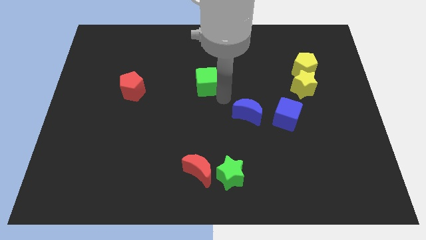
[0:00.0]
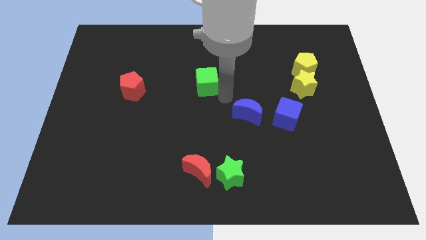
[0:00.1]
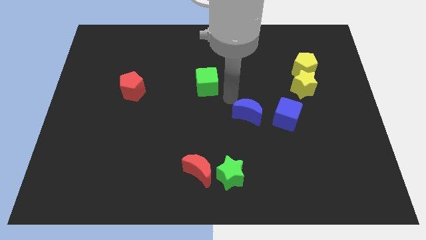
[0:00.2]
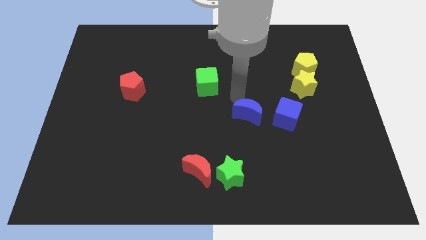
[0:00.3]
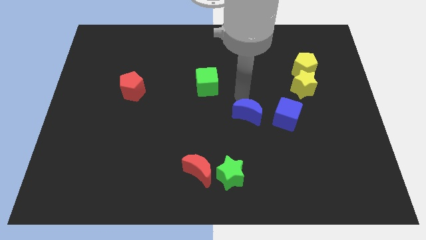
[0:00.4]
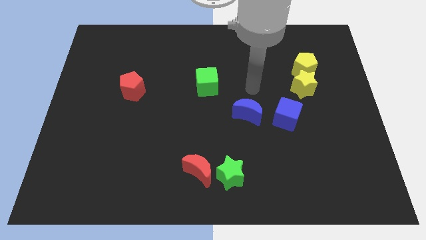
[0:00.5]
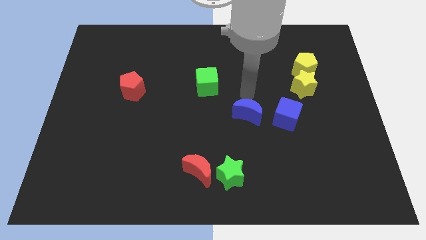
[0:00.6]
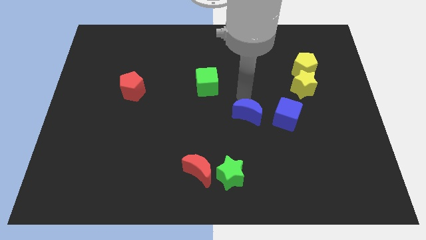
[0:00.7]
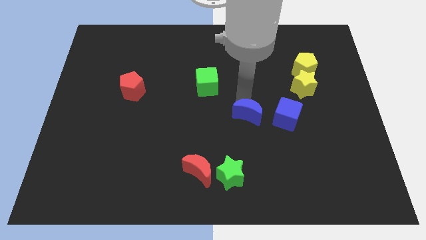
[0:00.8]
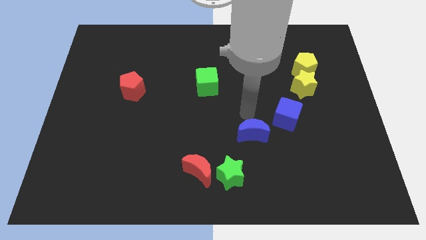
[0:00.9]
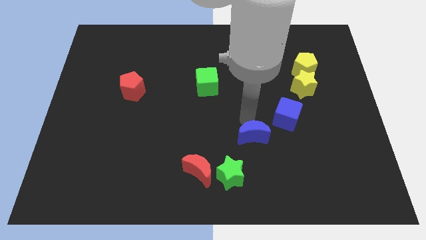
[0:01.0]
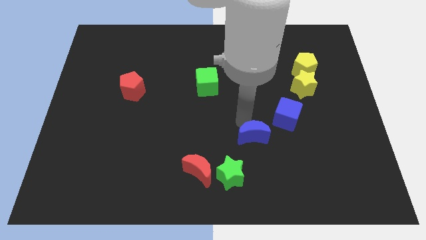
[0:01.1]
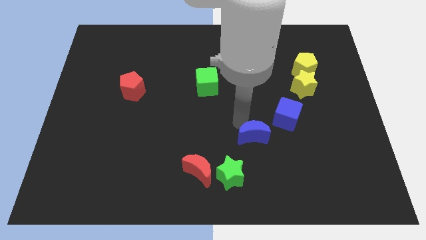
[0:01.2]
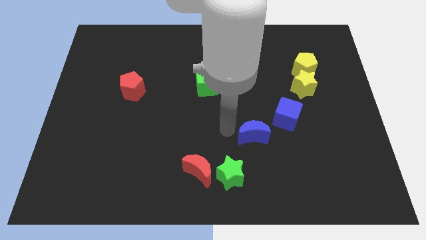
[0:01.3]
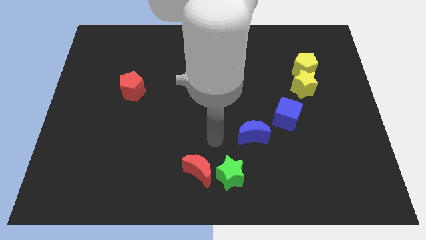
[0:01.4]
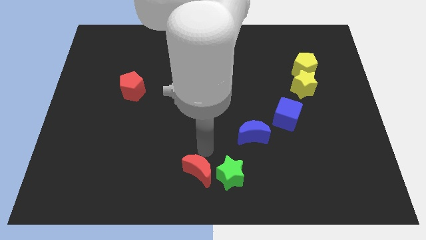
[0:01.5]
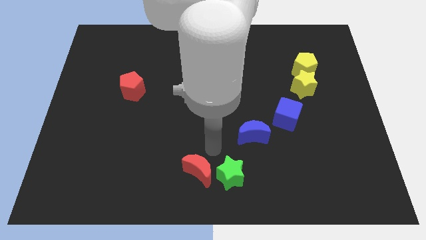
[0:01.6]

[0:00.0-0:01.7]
slightly move the blue crescent towards the bottom side of the board

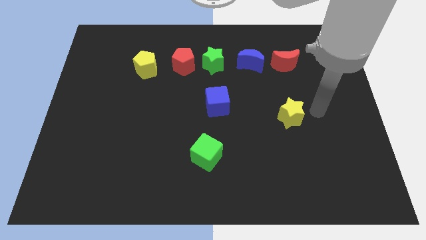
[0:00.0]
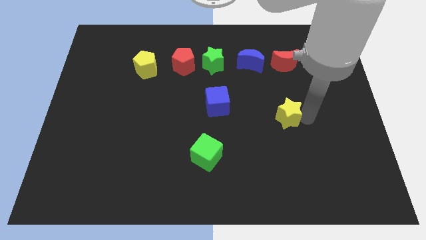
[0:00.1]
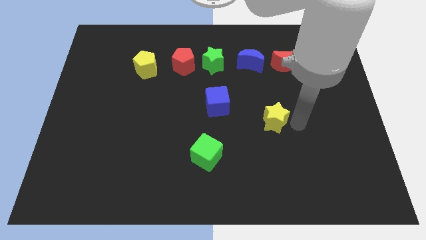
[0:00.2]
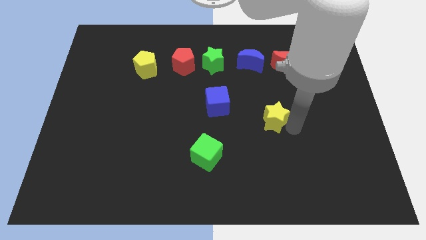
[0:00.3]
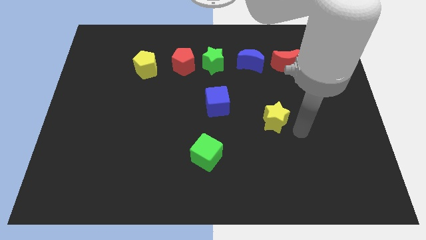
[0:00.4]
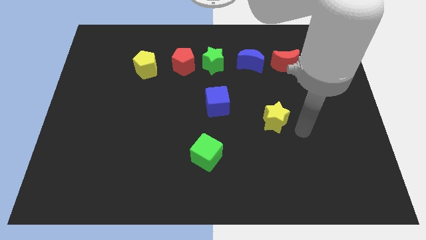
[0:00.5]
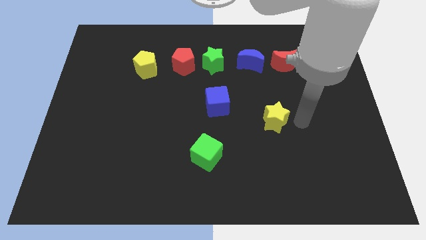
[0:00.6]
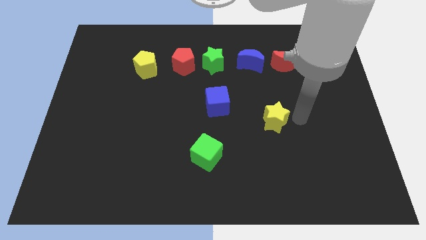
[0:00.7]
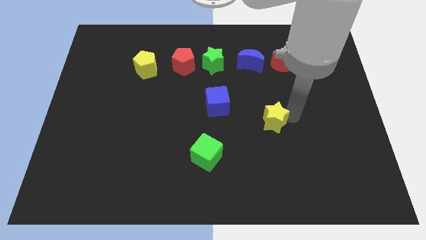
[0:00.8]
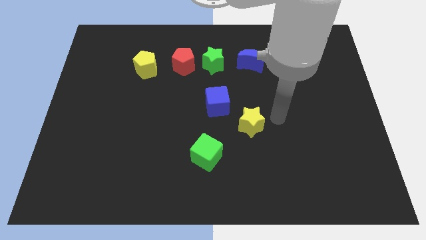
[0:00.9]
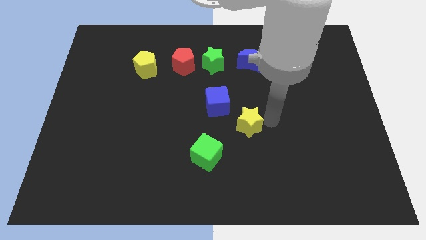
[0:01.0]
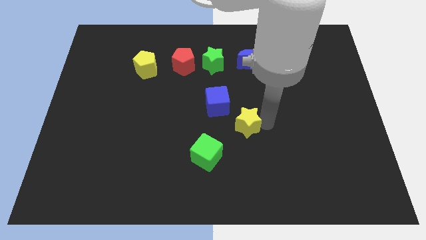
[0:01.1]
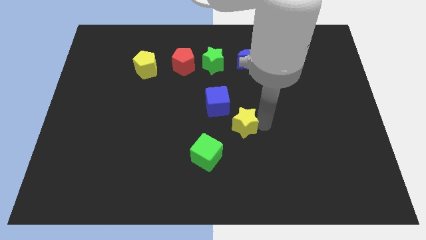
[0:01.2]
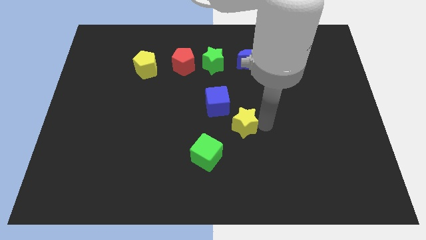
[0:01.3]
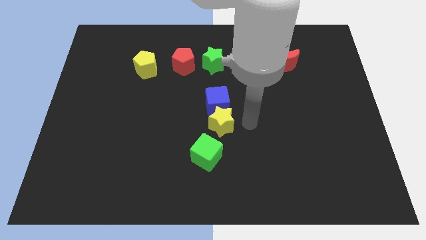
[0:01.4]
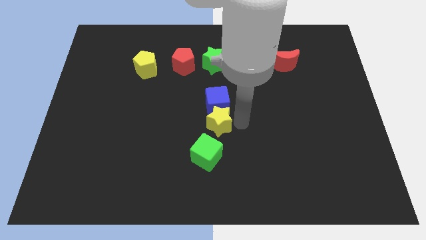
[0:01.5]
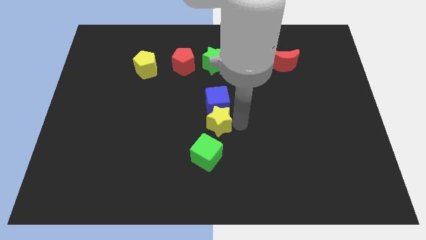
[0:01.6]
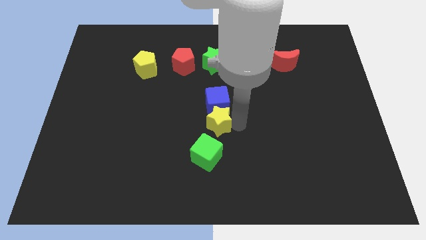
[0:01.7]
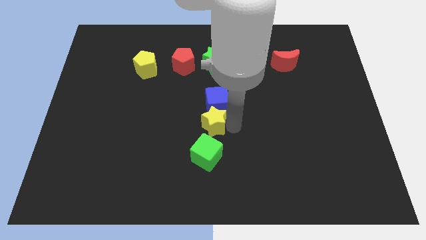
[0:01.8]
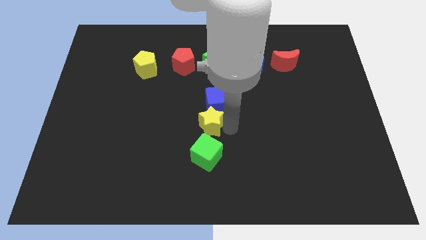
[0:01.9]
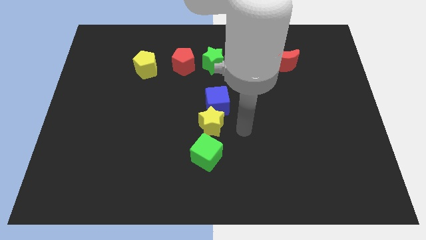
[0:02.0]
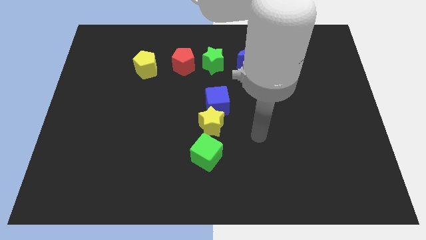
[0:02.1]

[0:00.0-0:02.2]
place the yellow star between blue and green cube at the center

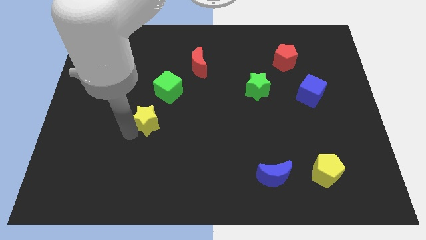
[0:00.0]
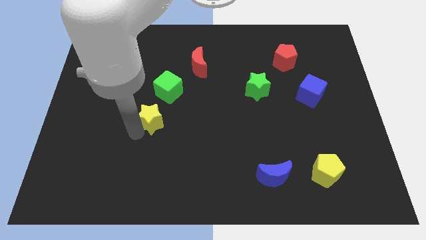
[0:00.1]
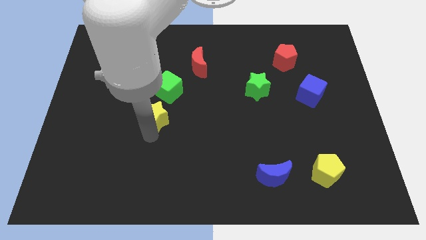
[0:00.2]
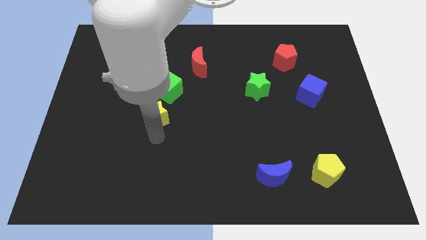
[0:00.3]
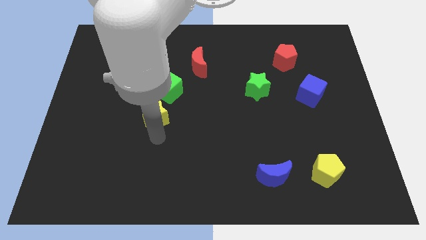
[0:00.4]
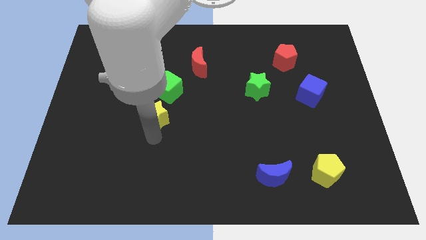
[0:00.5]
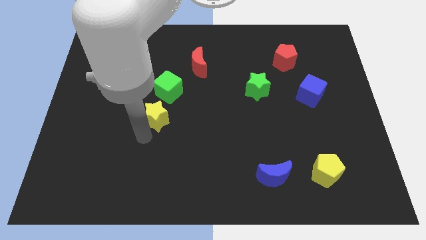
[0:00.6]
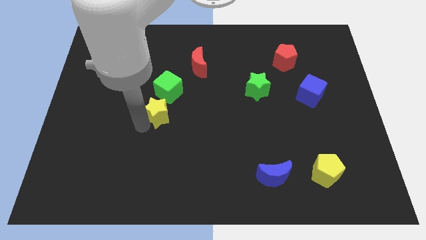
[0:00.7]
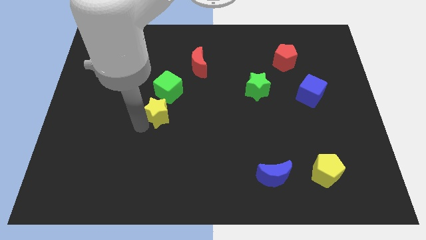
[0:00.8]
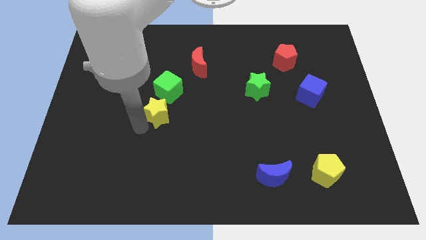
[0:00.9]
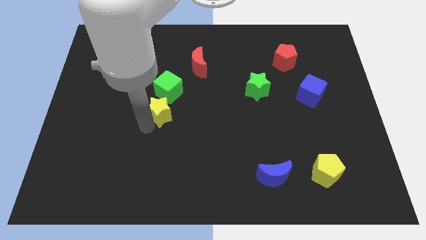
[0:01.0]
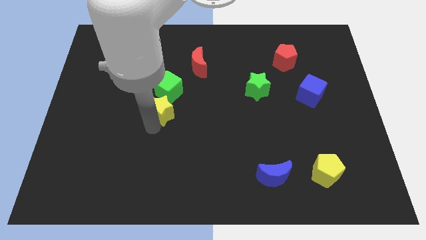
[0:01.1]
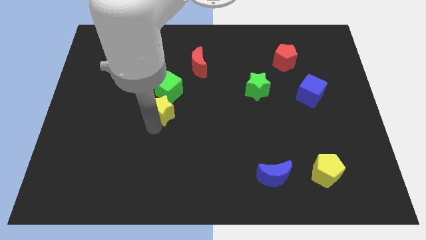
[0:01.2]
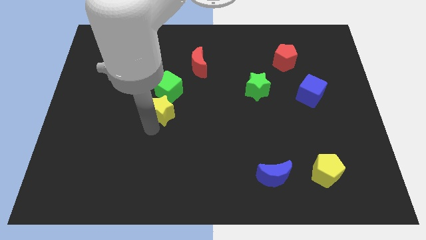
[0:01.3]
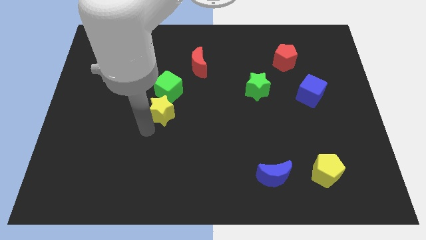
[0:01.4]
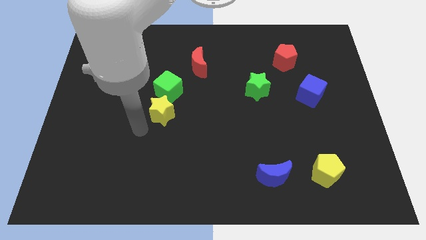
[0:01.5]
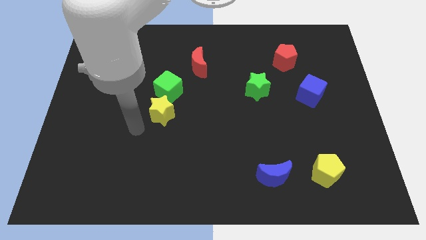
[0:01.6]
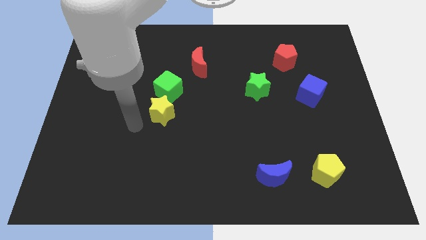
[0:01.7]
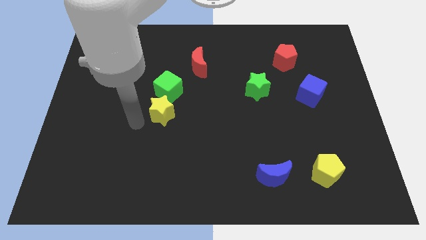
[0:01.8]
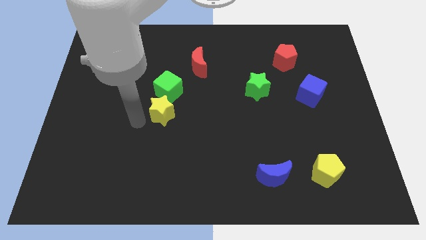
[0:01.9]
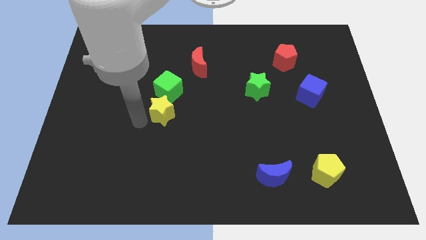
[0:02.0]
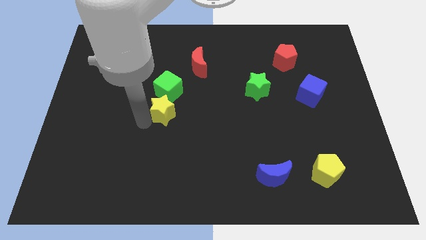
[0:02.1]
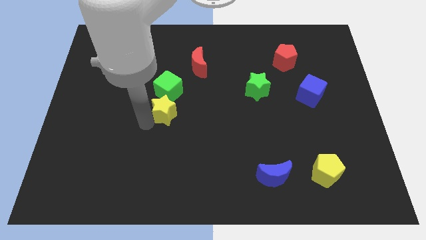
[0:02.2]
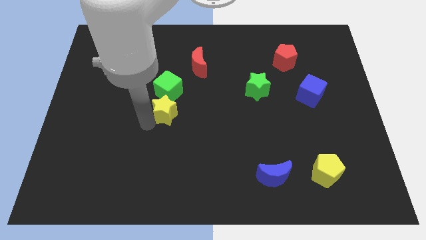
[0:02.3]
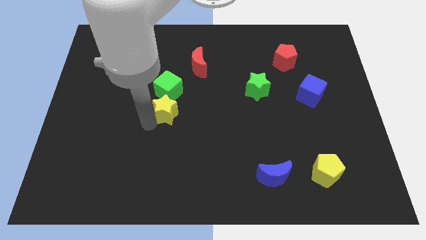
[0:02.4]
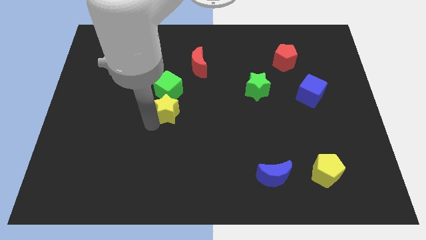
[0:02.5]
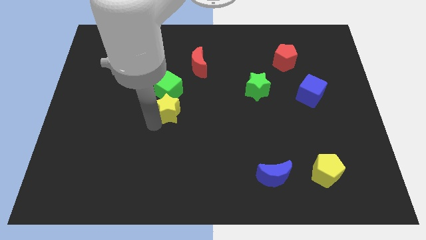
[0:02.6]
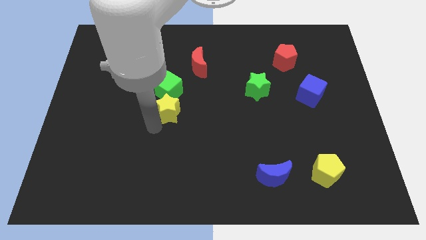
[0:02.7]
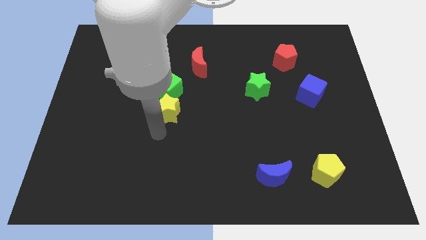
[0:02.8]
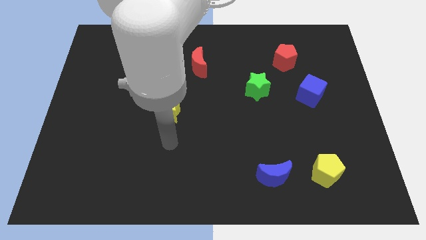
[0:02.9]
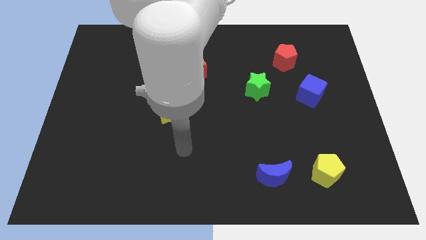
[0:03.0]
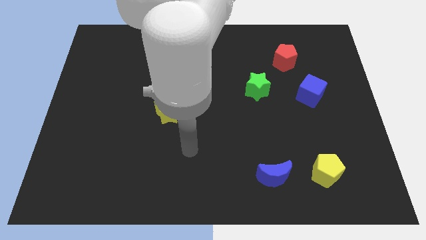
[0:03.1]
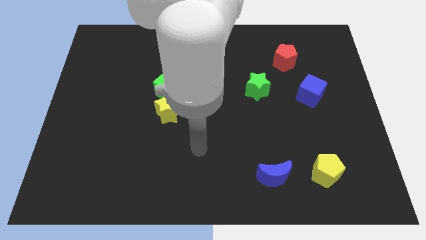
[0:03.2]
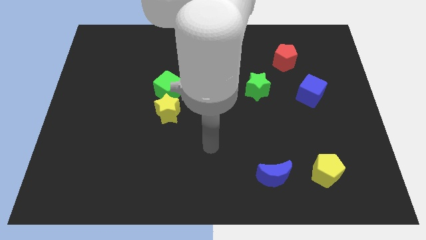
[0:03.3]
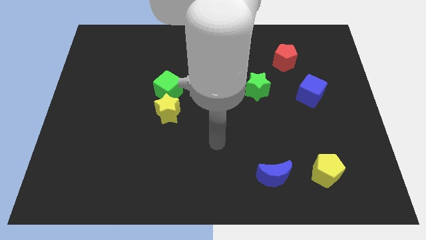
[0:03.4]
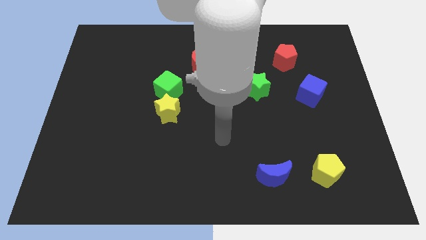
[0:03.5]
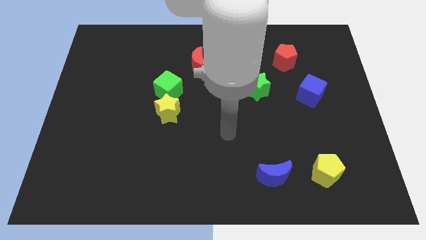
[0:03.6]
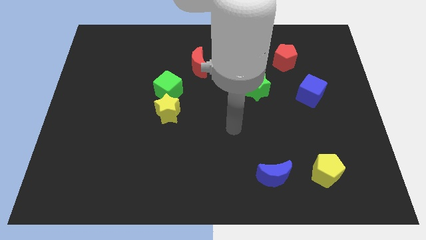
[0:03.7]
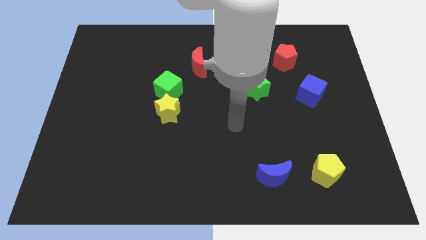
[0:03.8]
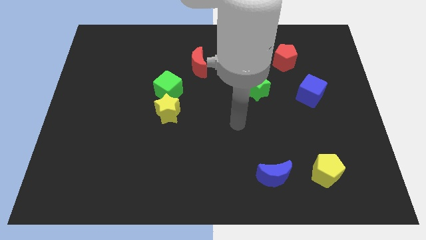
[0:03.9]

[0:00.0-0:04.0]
place the yellow star into the green cube

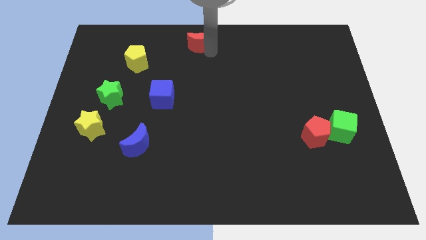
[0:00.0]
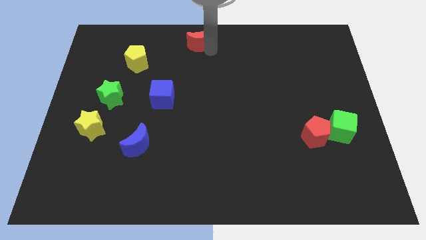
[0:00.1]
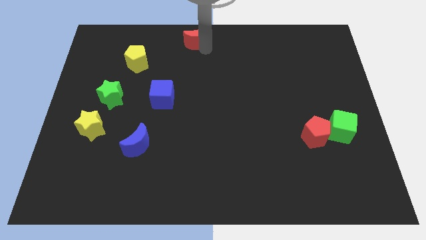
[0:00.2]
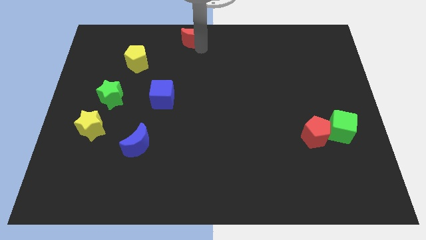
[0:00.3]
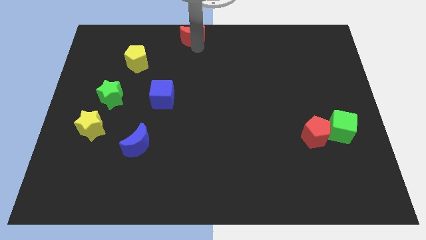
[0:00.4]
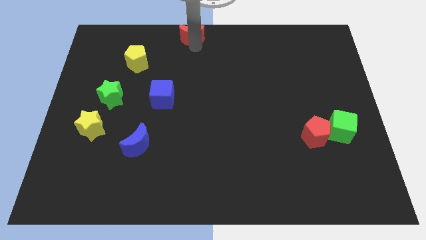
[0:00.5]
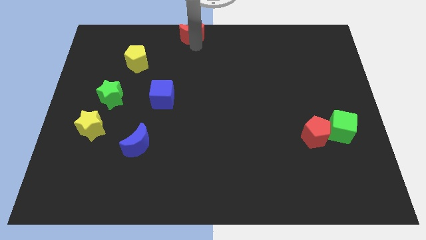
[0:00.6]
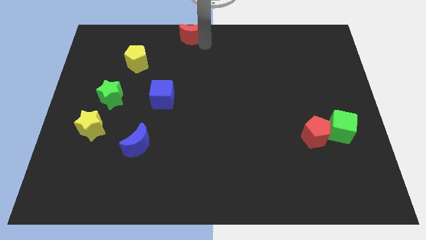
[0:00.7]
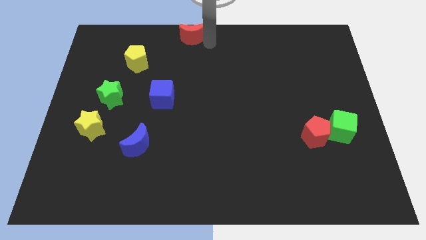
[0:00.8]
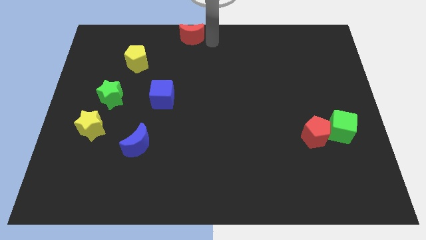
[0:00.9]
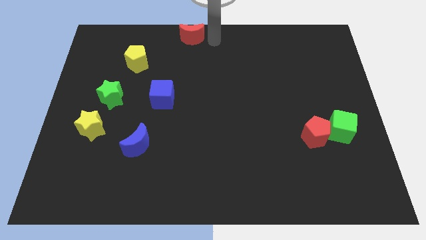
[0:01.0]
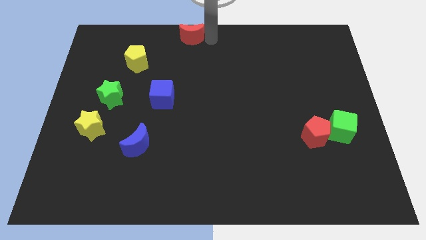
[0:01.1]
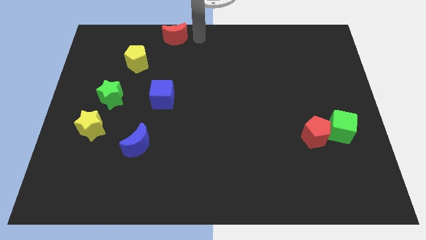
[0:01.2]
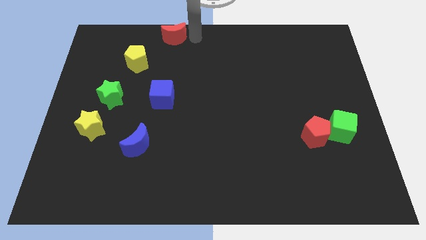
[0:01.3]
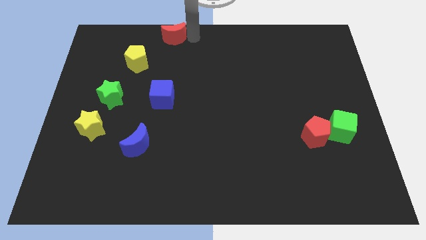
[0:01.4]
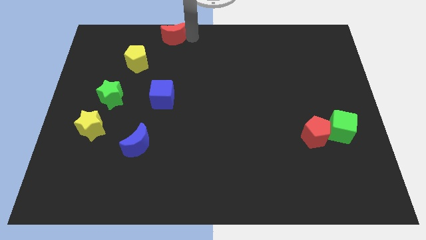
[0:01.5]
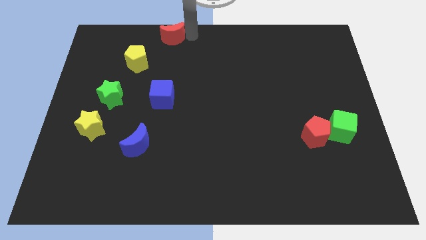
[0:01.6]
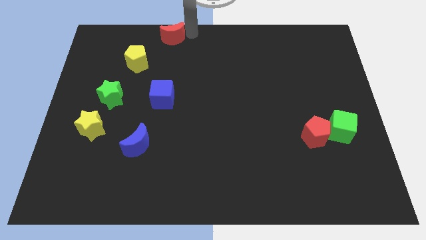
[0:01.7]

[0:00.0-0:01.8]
move the red moon at the top right side of the yellow pentagon
